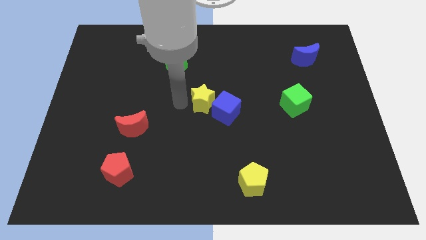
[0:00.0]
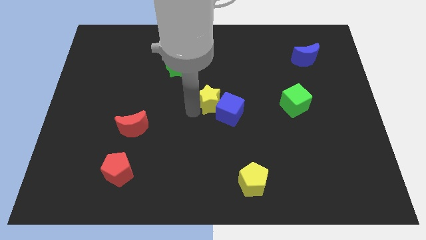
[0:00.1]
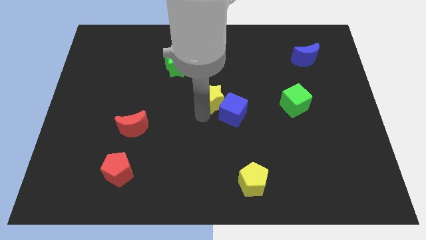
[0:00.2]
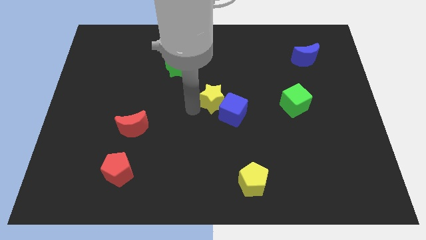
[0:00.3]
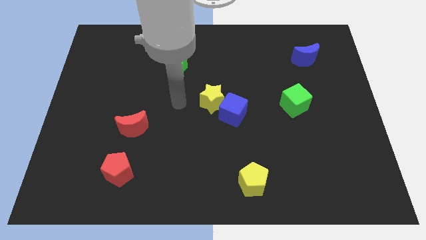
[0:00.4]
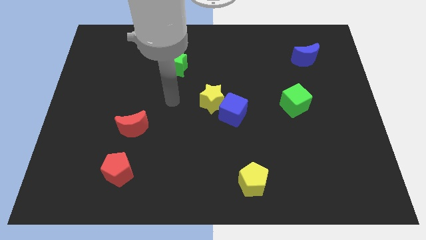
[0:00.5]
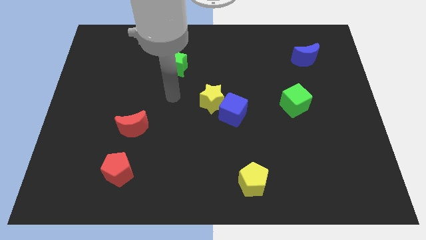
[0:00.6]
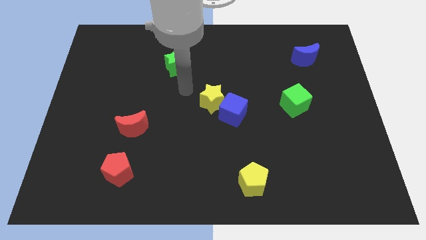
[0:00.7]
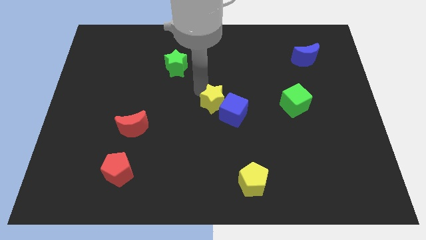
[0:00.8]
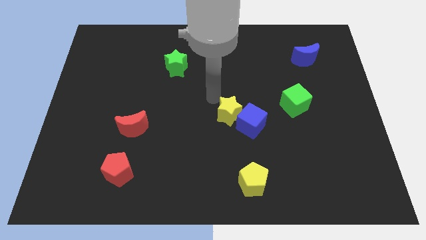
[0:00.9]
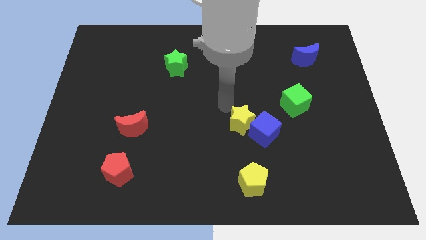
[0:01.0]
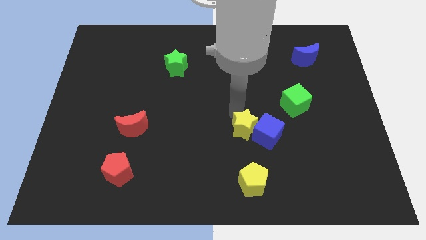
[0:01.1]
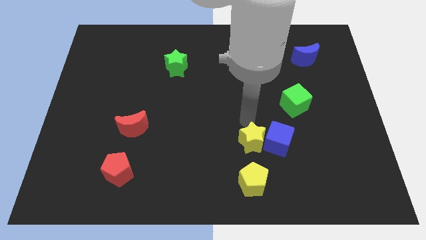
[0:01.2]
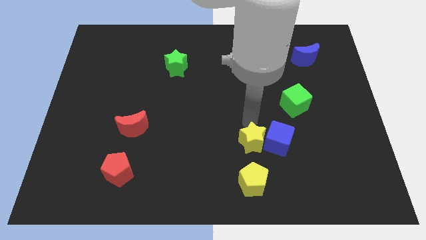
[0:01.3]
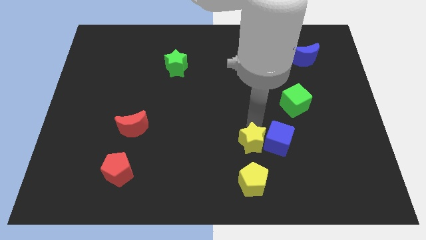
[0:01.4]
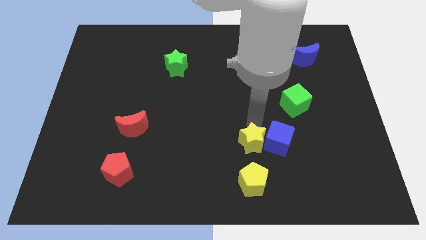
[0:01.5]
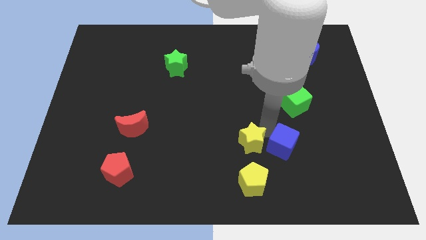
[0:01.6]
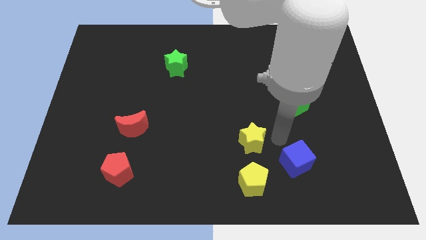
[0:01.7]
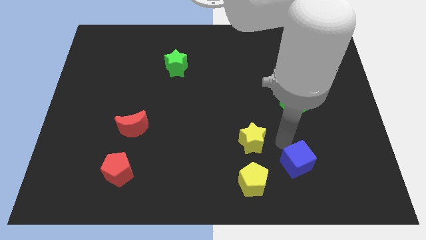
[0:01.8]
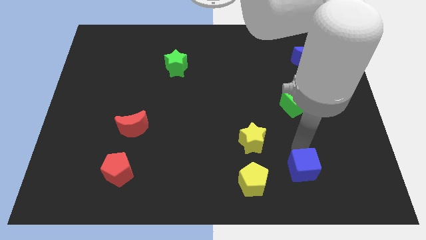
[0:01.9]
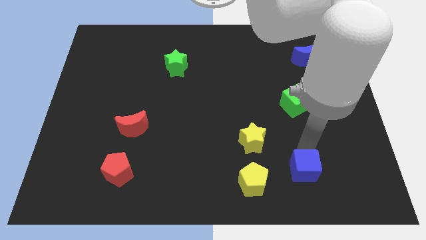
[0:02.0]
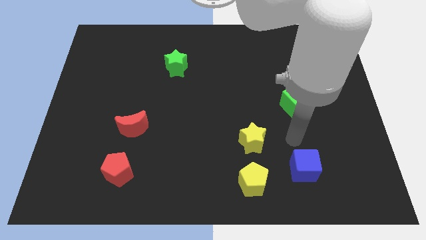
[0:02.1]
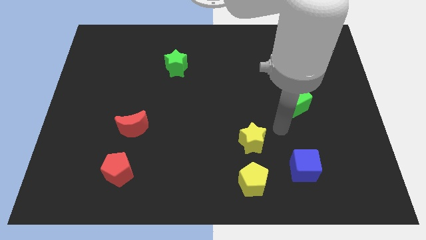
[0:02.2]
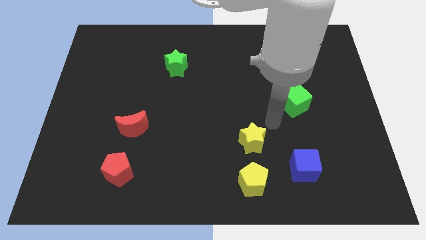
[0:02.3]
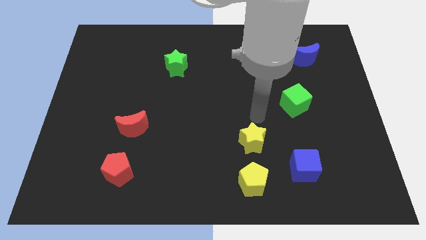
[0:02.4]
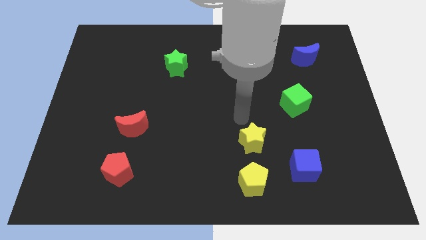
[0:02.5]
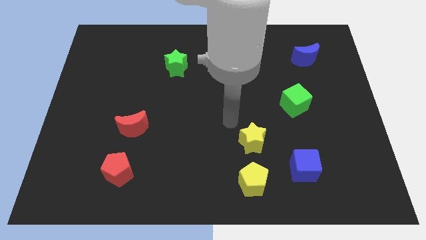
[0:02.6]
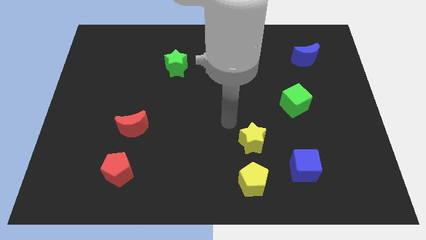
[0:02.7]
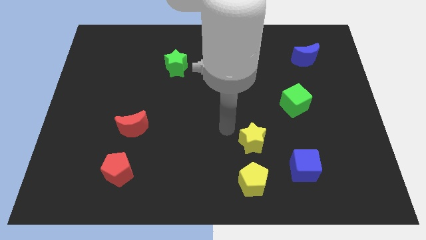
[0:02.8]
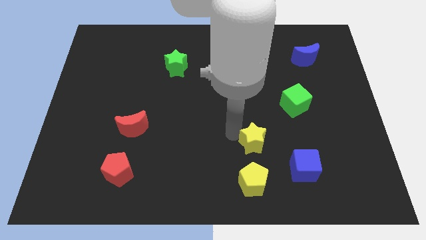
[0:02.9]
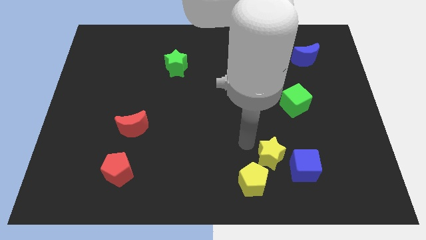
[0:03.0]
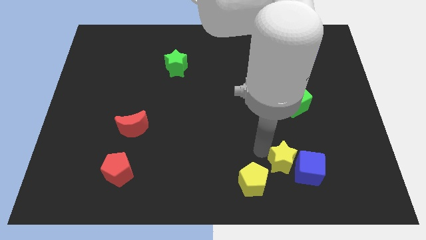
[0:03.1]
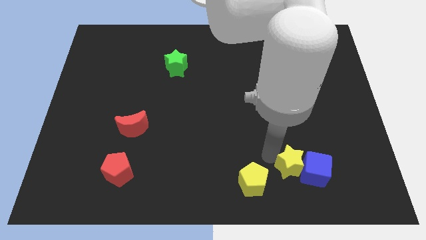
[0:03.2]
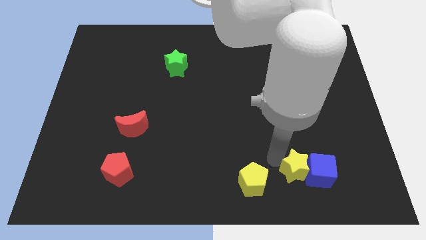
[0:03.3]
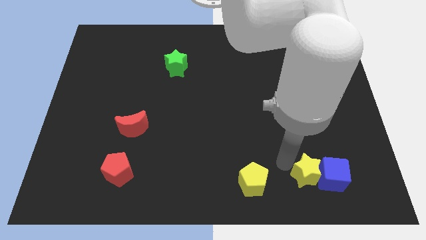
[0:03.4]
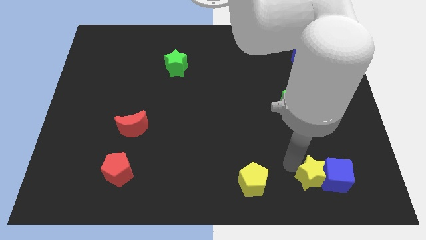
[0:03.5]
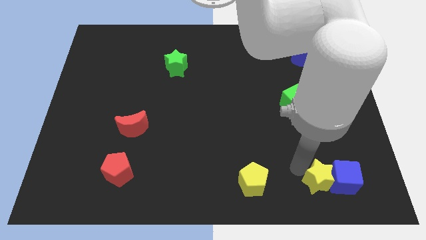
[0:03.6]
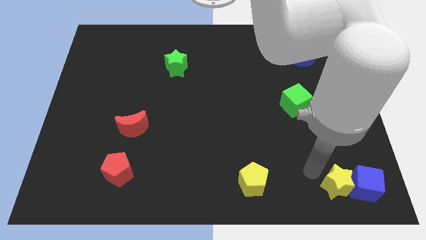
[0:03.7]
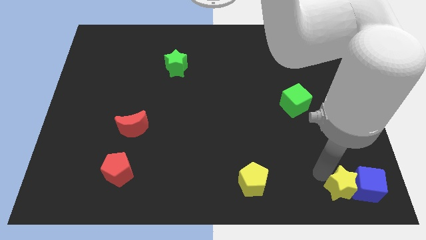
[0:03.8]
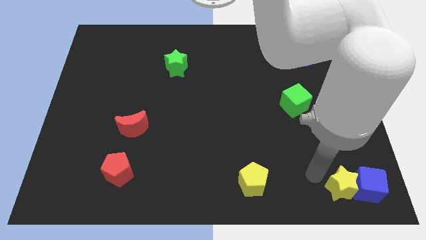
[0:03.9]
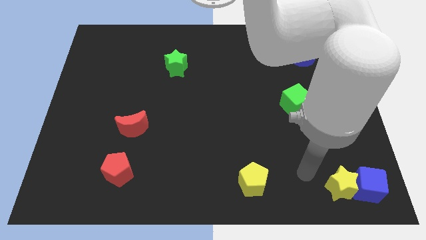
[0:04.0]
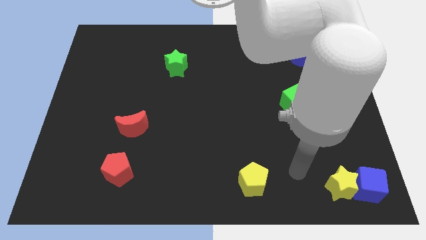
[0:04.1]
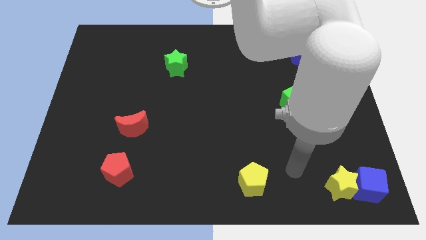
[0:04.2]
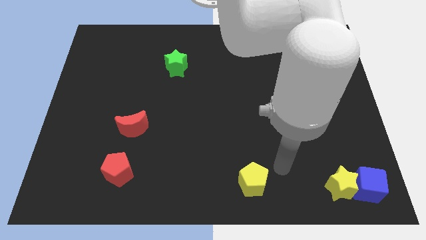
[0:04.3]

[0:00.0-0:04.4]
push both the yellow star and blue cube towards the bottom right

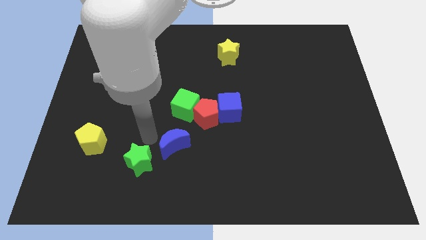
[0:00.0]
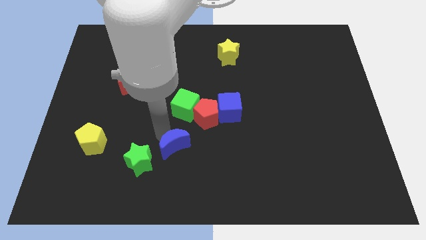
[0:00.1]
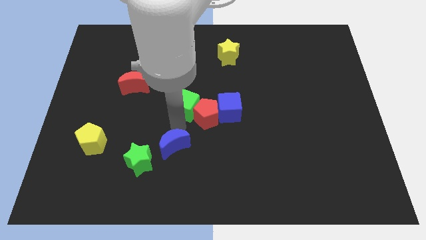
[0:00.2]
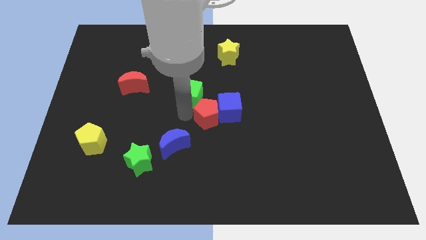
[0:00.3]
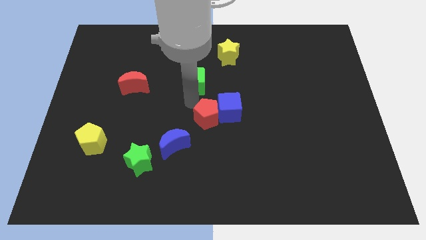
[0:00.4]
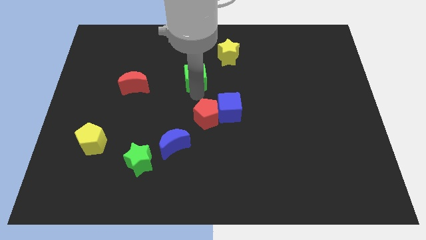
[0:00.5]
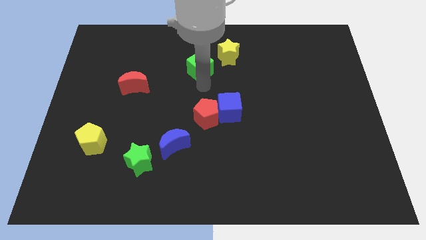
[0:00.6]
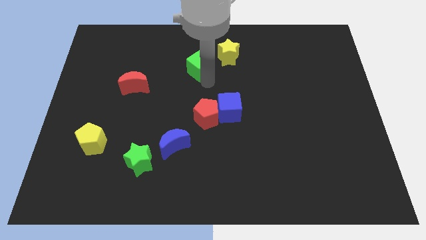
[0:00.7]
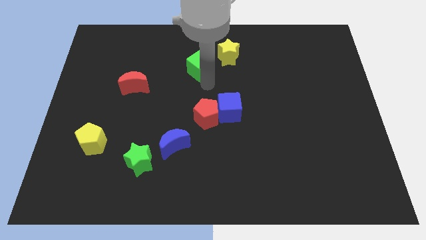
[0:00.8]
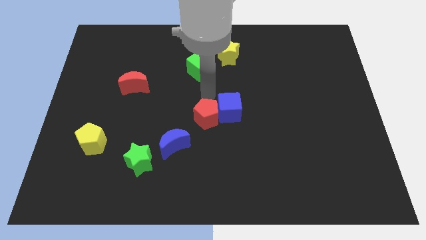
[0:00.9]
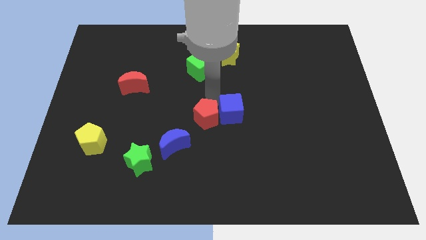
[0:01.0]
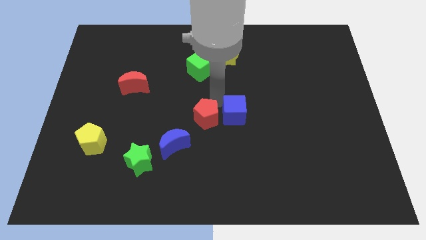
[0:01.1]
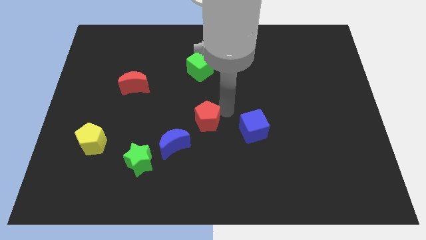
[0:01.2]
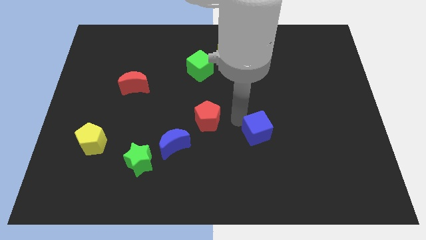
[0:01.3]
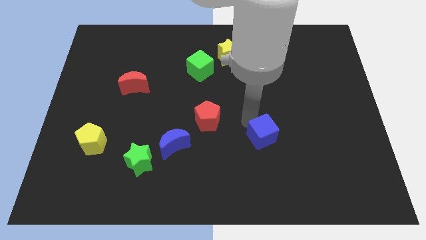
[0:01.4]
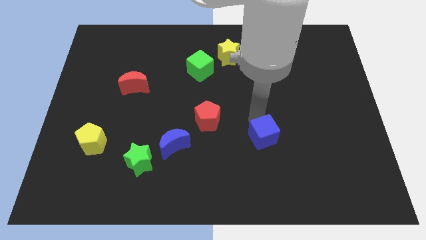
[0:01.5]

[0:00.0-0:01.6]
push the green cube to the bottom left of the yellow star

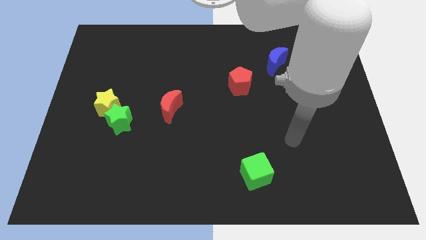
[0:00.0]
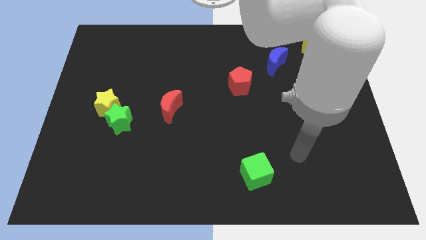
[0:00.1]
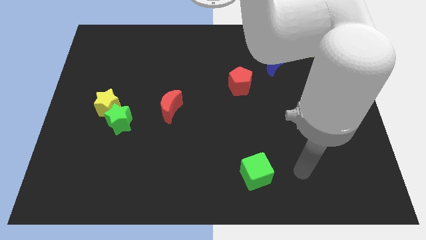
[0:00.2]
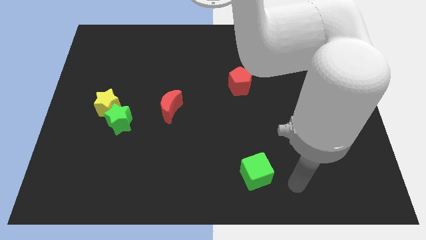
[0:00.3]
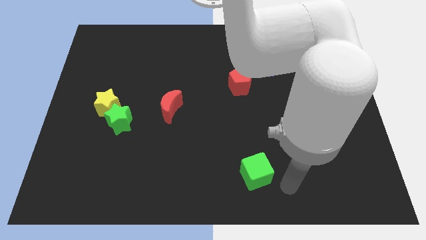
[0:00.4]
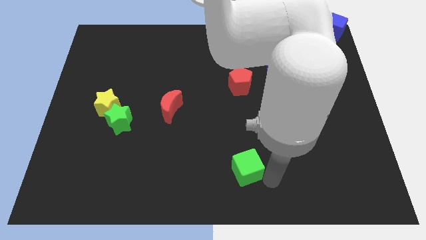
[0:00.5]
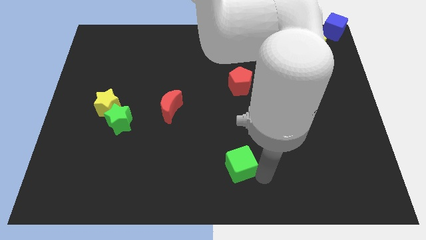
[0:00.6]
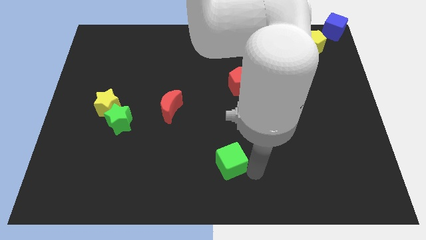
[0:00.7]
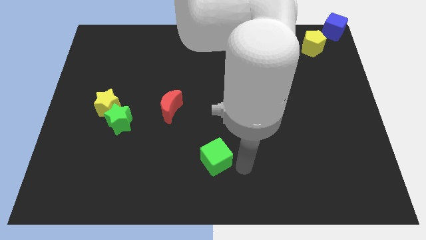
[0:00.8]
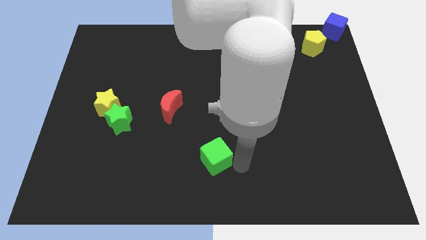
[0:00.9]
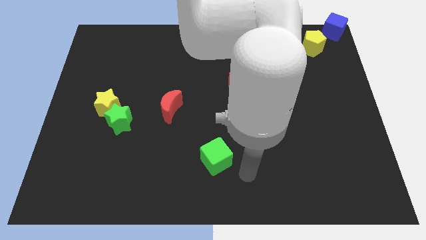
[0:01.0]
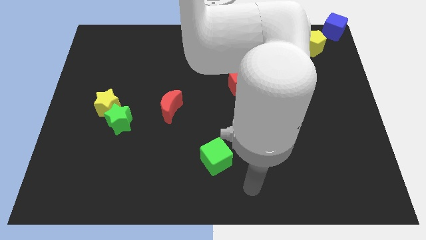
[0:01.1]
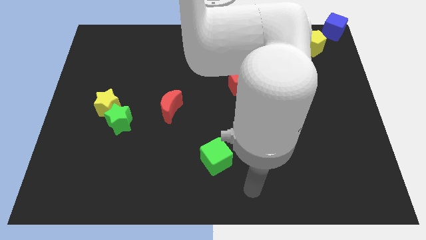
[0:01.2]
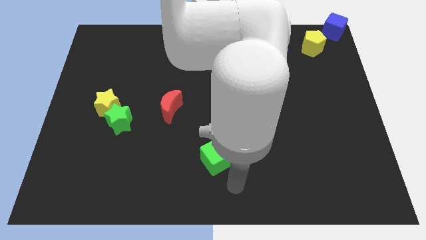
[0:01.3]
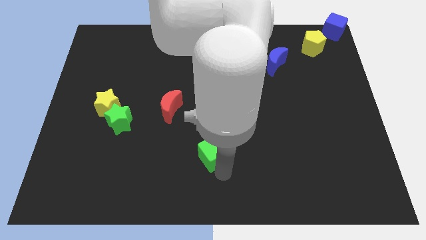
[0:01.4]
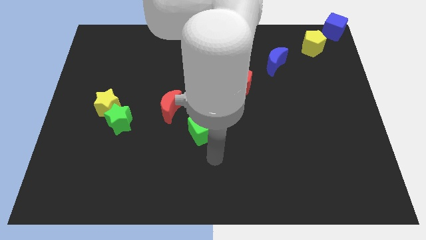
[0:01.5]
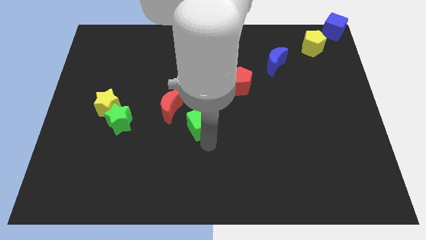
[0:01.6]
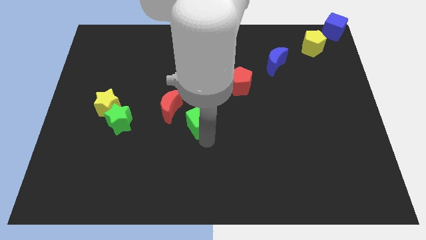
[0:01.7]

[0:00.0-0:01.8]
move the green cube towards the red crescent

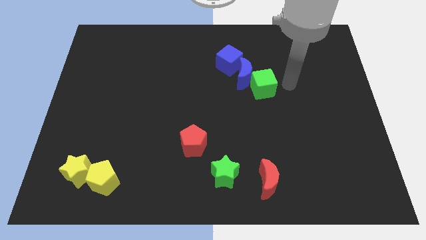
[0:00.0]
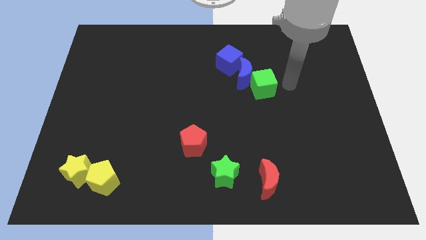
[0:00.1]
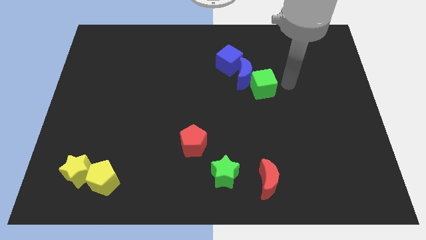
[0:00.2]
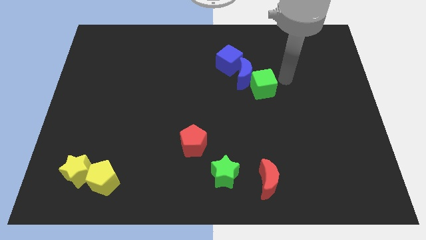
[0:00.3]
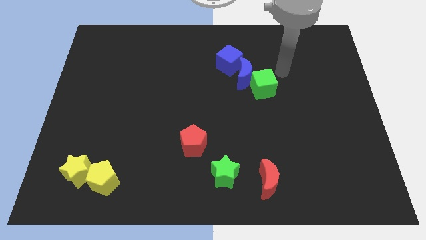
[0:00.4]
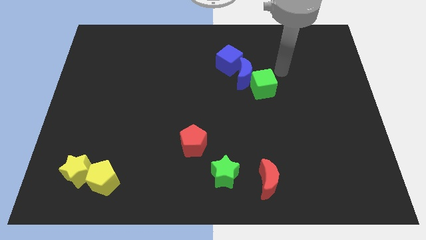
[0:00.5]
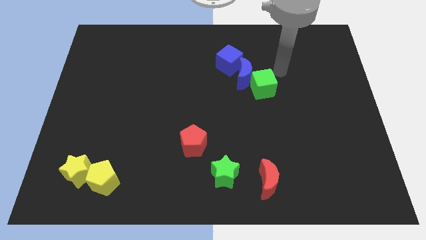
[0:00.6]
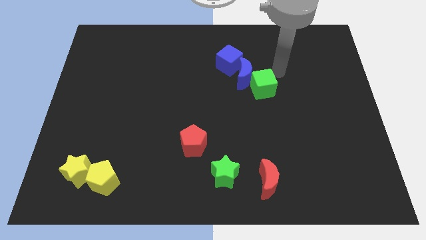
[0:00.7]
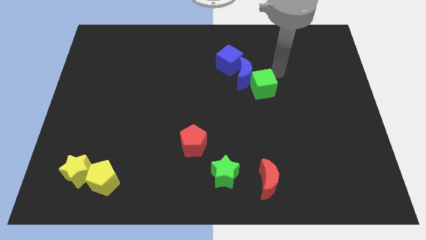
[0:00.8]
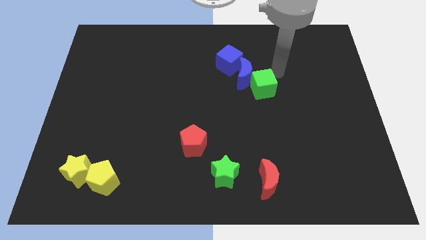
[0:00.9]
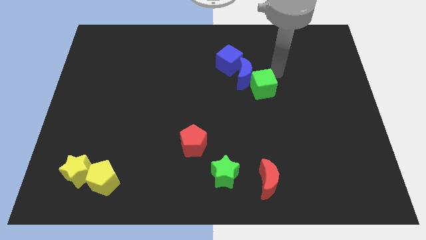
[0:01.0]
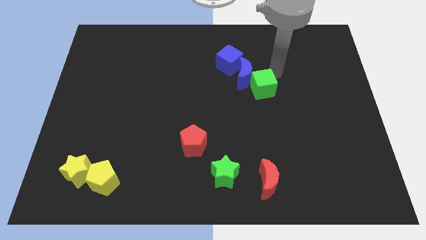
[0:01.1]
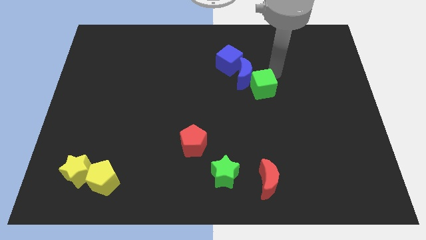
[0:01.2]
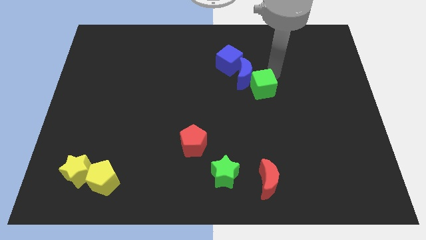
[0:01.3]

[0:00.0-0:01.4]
move your arm to the top side of the green cube
